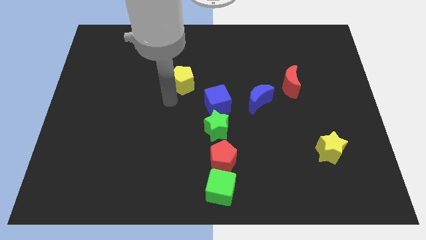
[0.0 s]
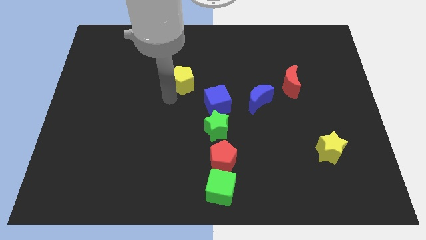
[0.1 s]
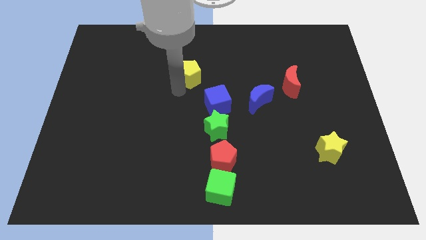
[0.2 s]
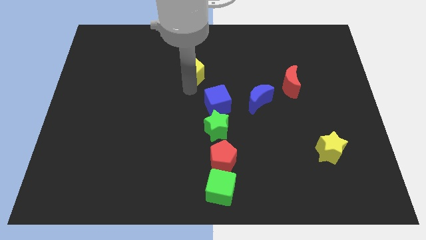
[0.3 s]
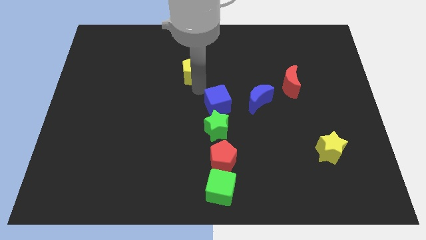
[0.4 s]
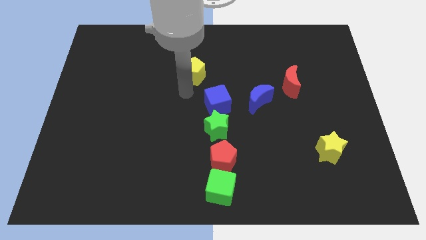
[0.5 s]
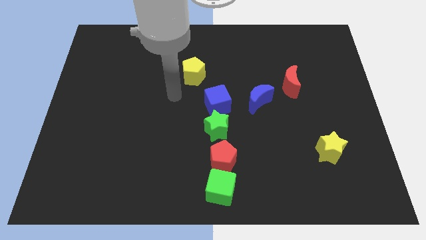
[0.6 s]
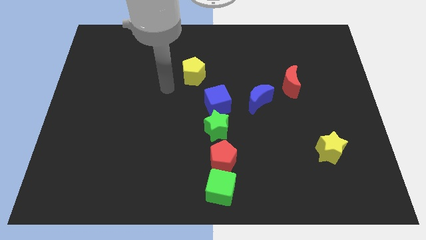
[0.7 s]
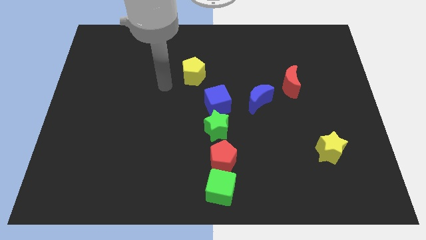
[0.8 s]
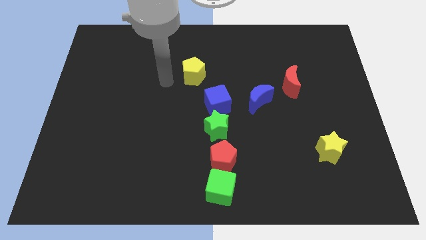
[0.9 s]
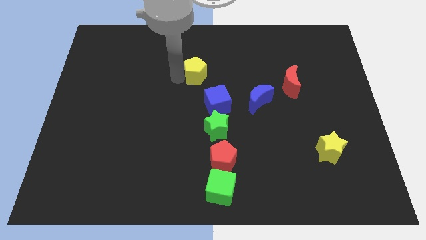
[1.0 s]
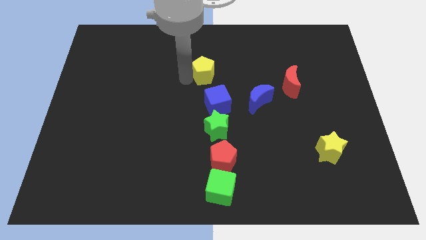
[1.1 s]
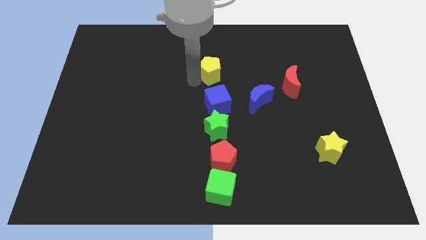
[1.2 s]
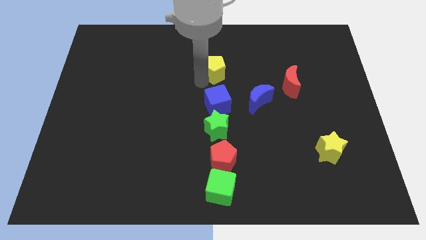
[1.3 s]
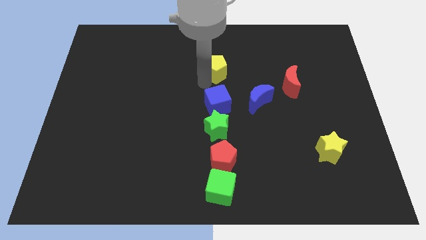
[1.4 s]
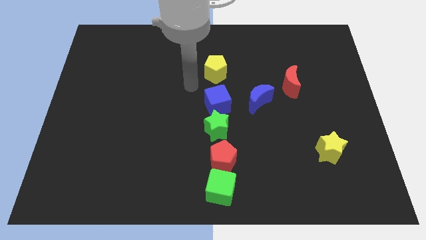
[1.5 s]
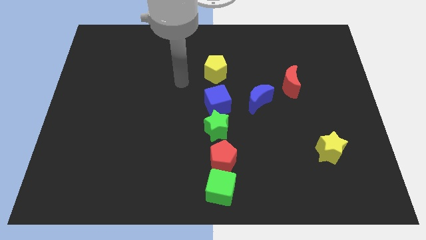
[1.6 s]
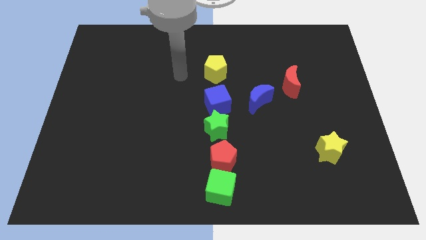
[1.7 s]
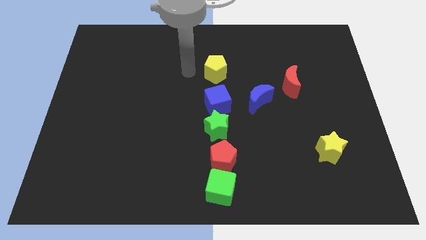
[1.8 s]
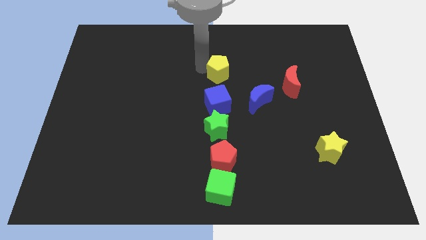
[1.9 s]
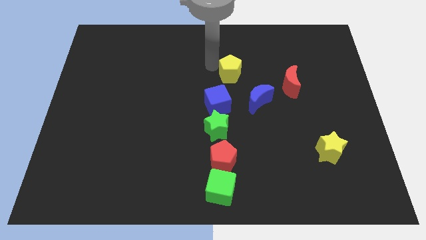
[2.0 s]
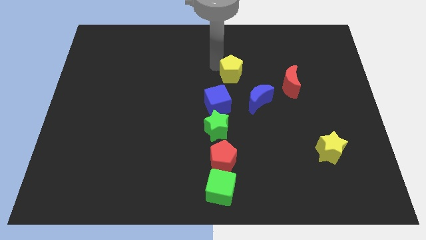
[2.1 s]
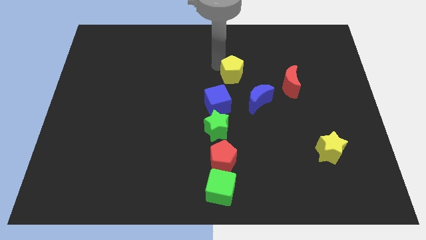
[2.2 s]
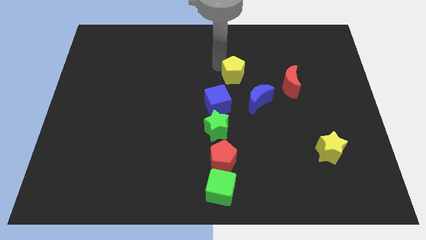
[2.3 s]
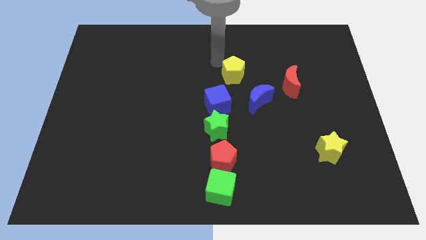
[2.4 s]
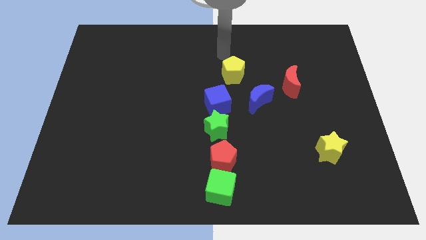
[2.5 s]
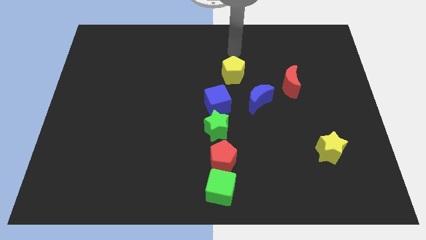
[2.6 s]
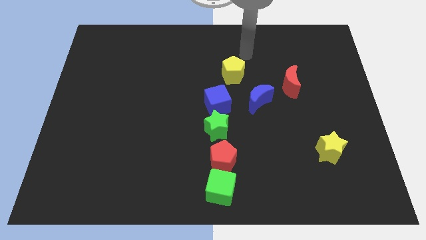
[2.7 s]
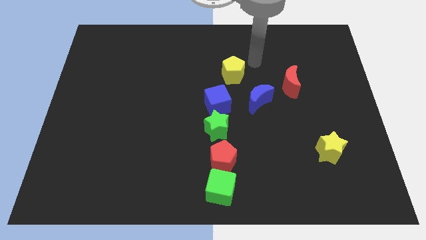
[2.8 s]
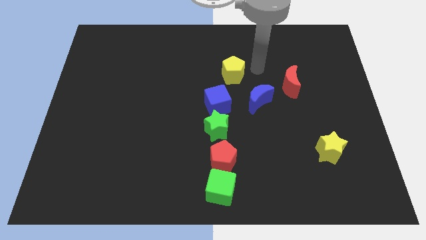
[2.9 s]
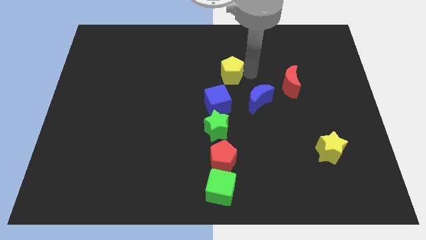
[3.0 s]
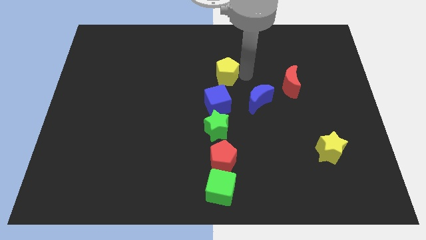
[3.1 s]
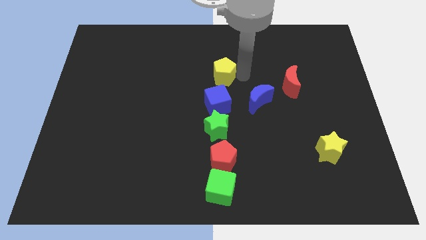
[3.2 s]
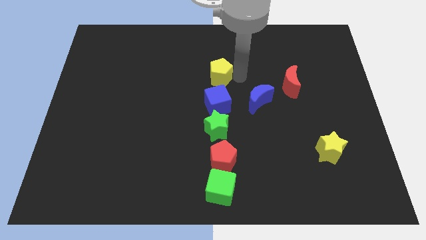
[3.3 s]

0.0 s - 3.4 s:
push the yellow pentagon to the top of the blue cube

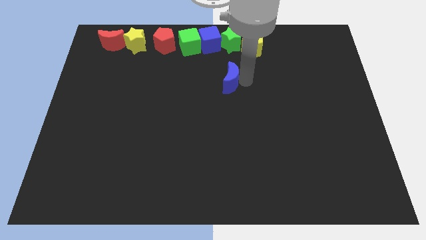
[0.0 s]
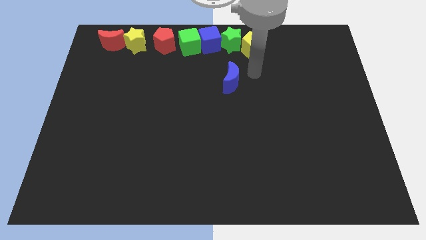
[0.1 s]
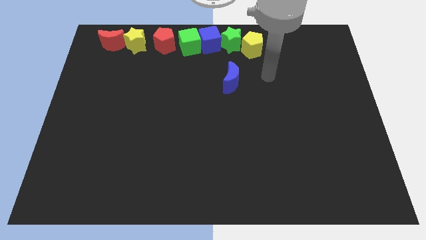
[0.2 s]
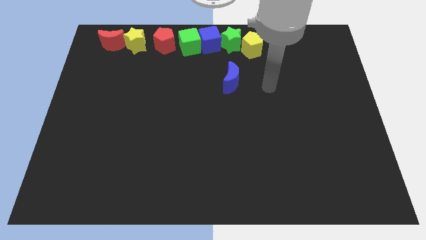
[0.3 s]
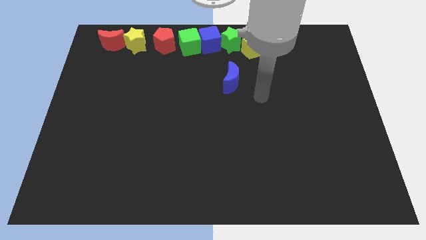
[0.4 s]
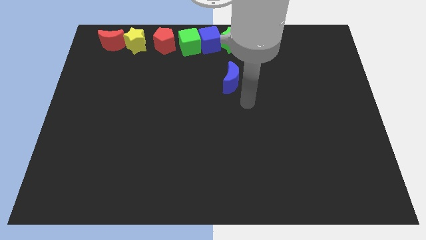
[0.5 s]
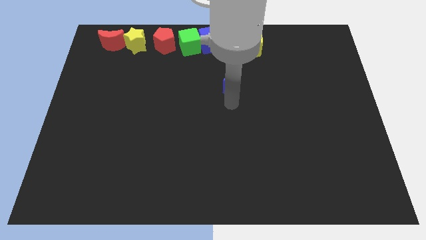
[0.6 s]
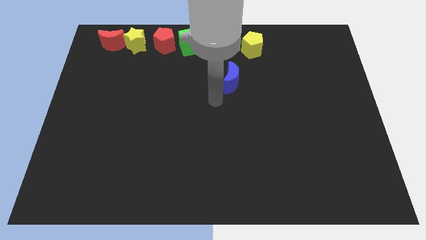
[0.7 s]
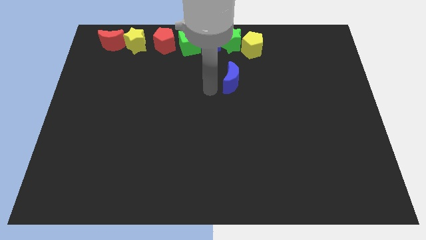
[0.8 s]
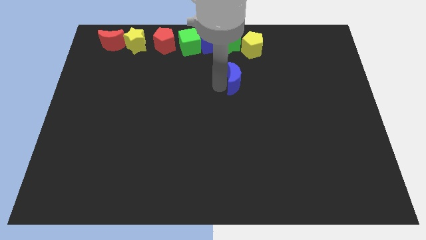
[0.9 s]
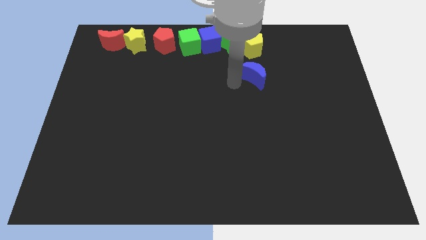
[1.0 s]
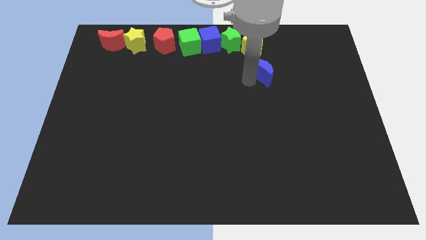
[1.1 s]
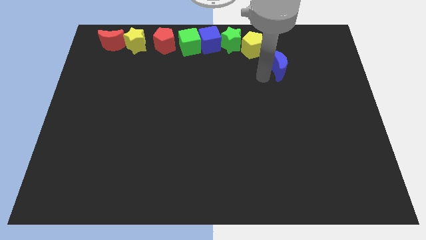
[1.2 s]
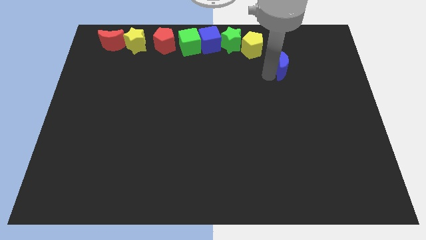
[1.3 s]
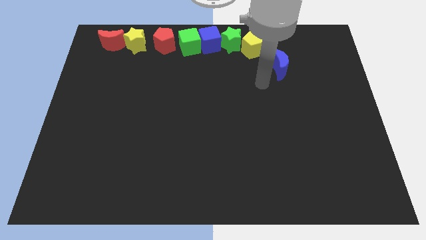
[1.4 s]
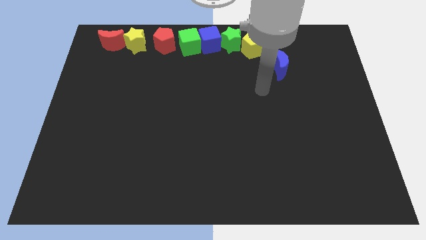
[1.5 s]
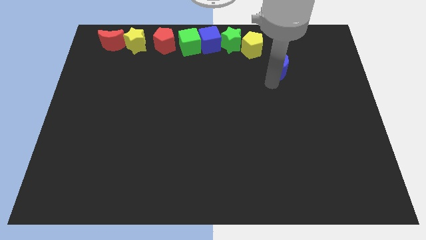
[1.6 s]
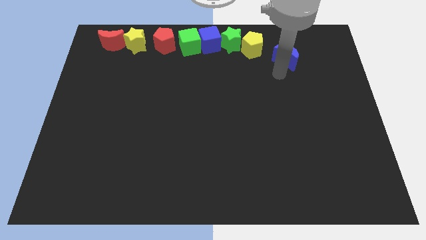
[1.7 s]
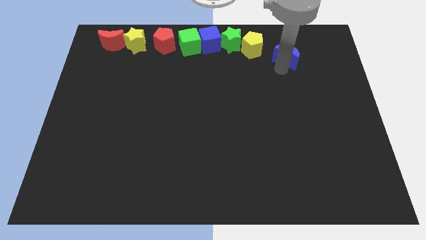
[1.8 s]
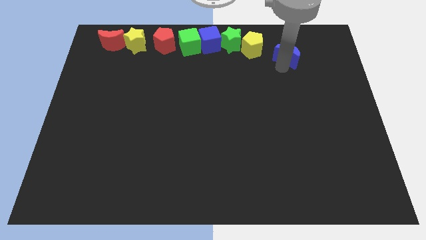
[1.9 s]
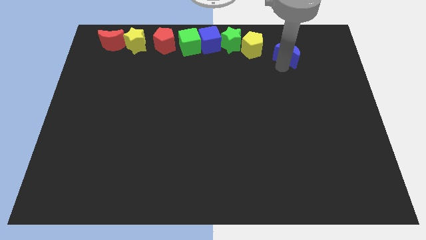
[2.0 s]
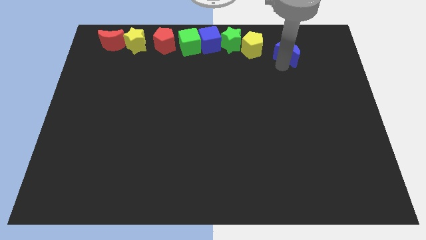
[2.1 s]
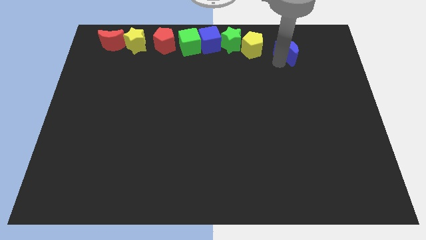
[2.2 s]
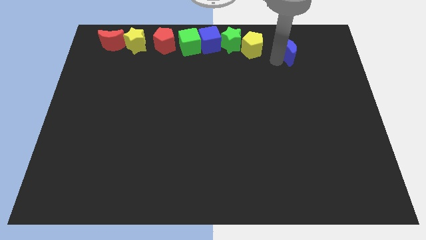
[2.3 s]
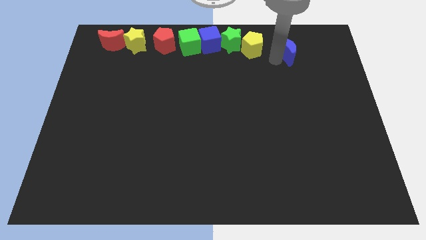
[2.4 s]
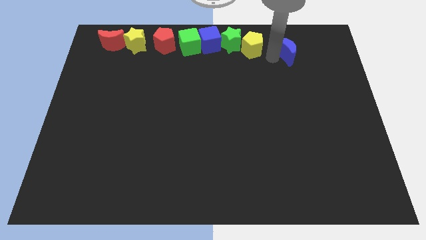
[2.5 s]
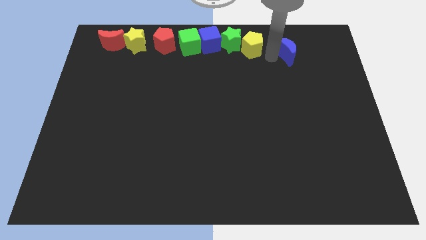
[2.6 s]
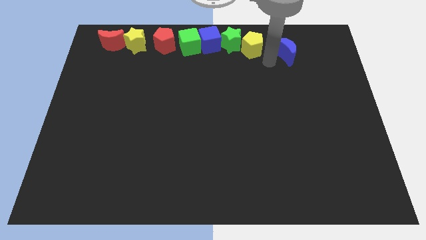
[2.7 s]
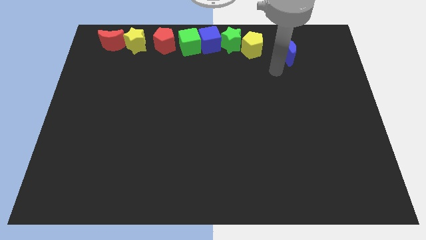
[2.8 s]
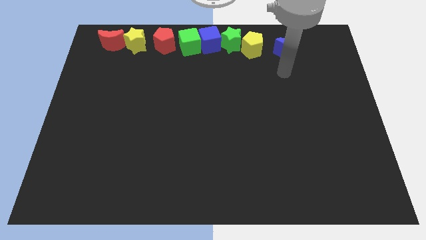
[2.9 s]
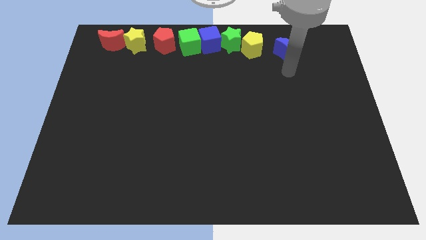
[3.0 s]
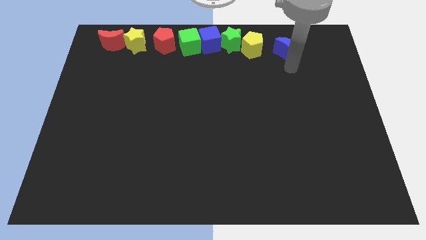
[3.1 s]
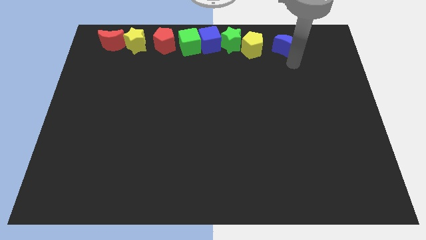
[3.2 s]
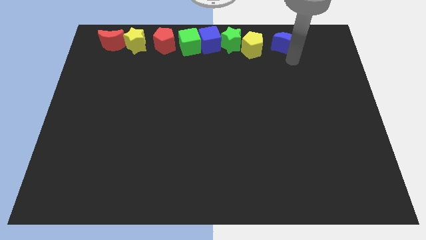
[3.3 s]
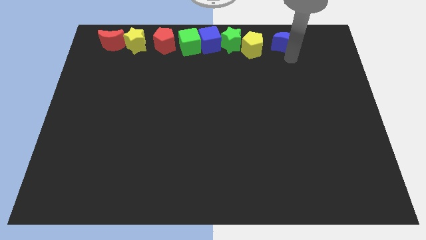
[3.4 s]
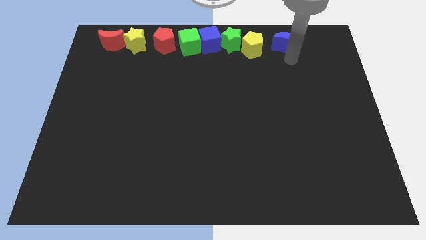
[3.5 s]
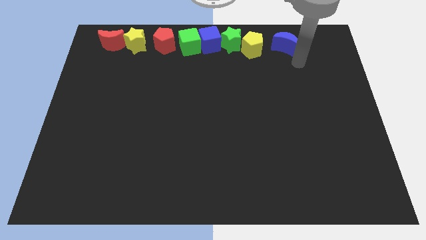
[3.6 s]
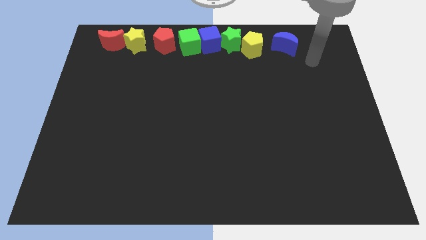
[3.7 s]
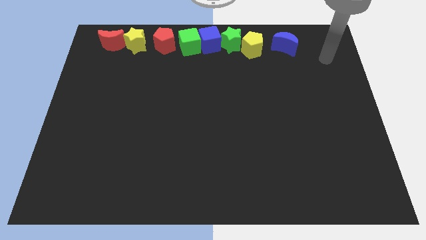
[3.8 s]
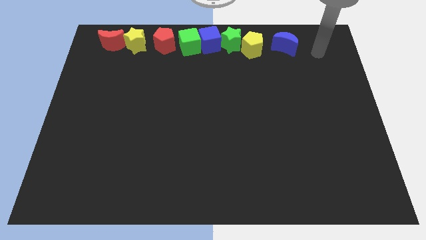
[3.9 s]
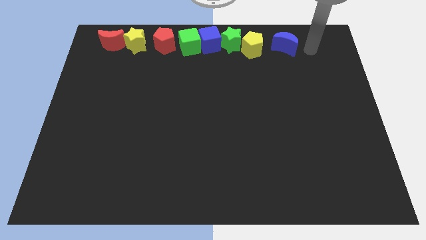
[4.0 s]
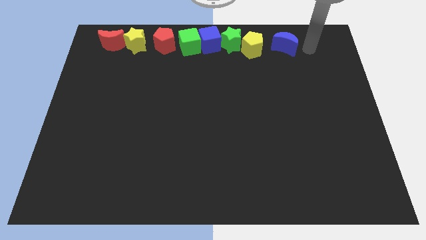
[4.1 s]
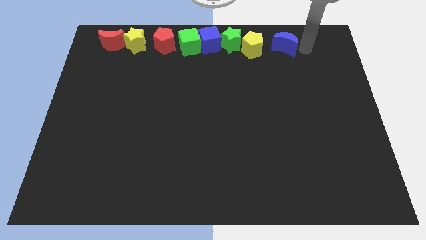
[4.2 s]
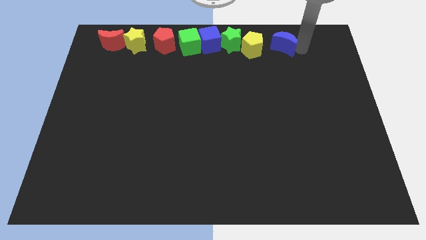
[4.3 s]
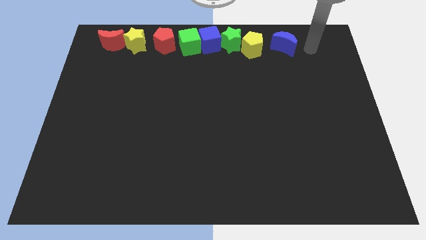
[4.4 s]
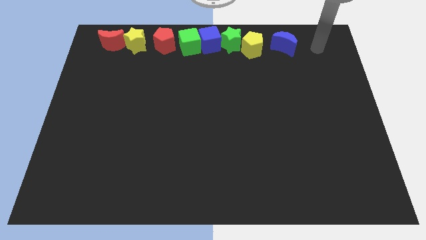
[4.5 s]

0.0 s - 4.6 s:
move blue moon to the right of yellow pentagon

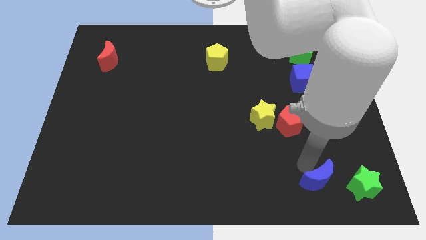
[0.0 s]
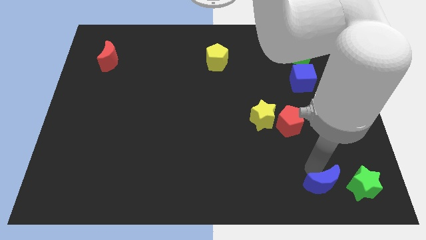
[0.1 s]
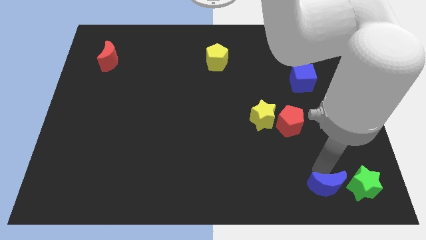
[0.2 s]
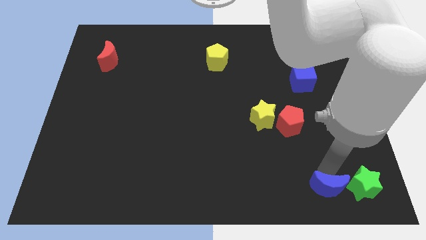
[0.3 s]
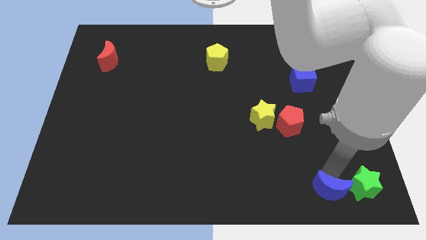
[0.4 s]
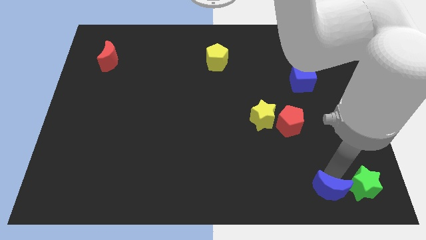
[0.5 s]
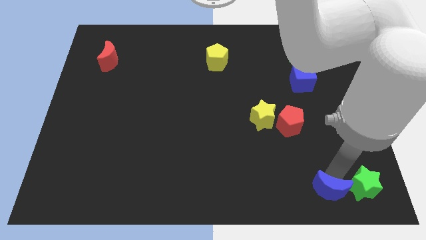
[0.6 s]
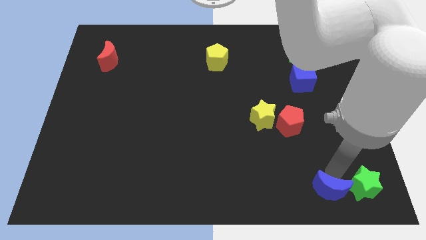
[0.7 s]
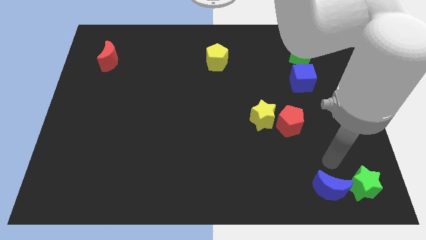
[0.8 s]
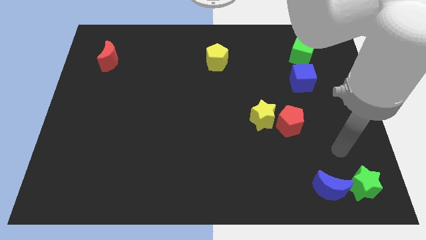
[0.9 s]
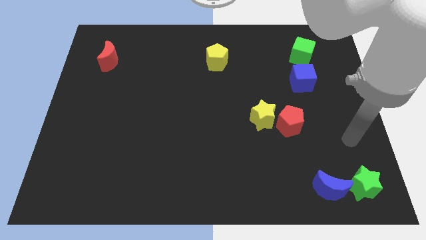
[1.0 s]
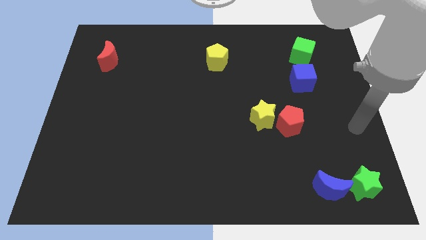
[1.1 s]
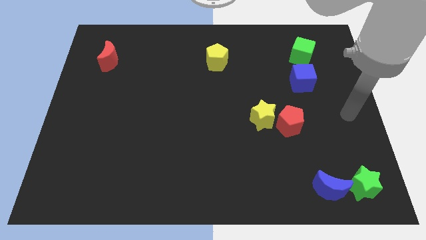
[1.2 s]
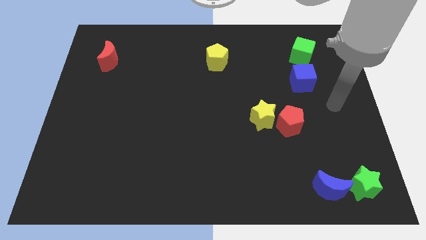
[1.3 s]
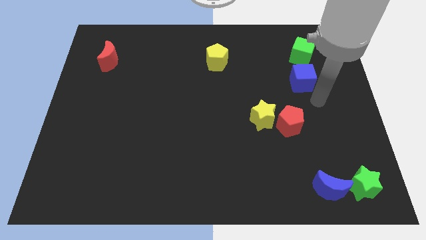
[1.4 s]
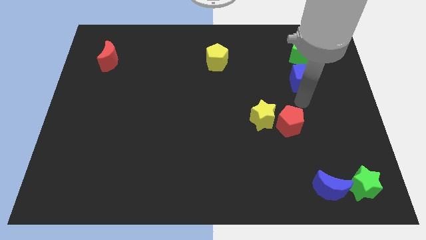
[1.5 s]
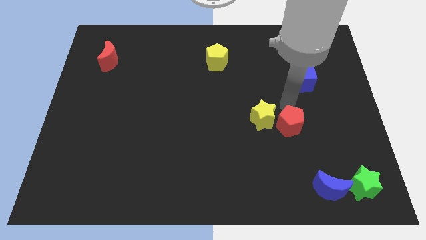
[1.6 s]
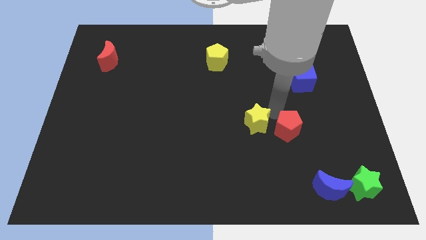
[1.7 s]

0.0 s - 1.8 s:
move the blue moon into the green star
